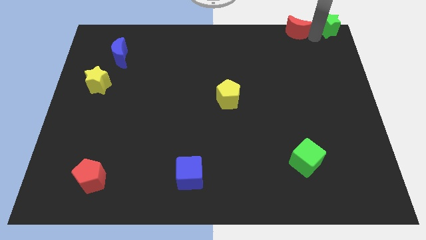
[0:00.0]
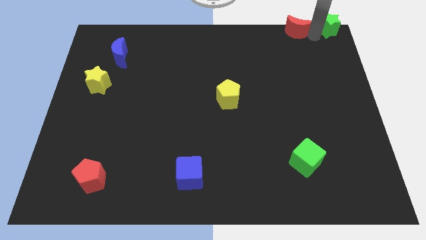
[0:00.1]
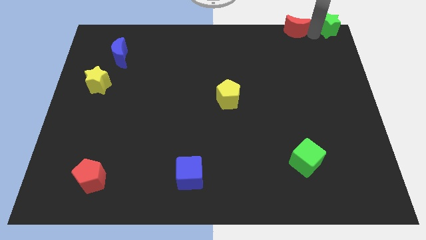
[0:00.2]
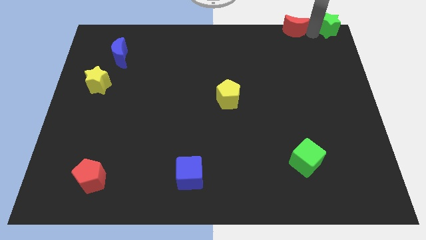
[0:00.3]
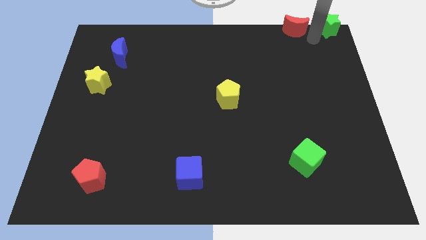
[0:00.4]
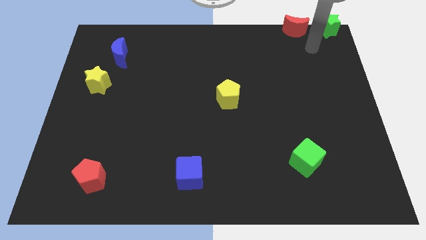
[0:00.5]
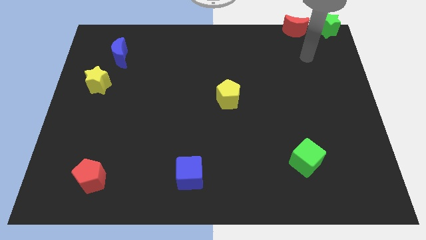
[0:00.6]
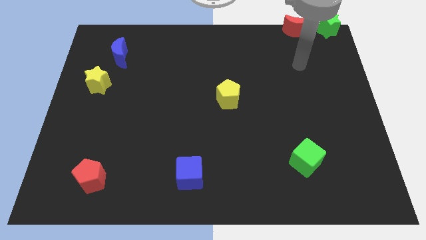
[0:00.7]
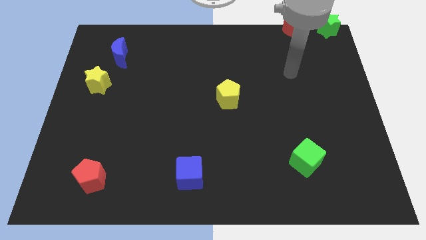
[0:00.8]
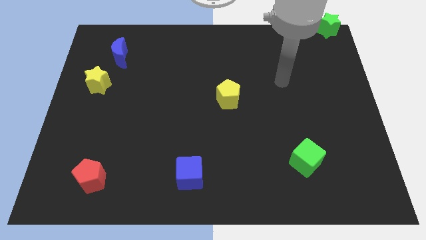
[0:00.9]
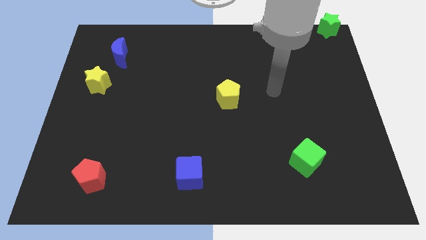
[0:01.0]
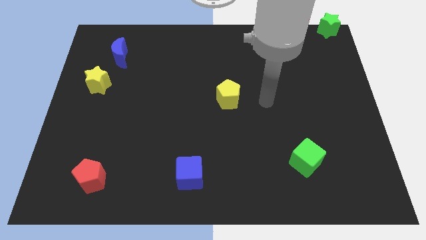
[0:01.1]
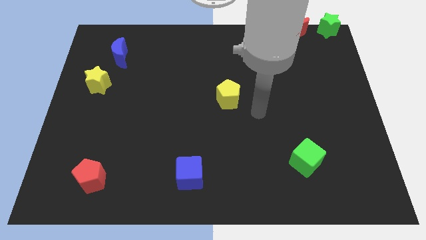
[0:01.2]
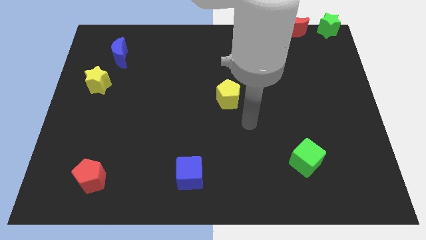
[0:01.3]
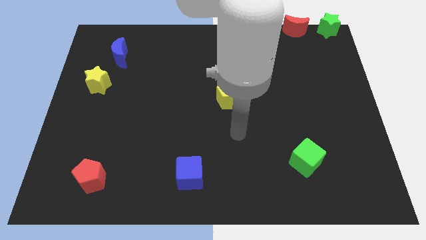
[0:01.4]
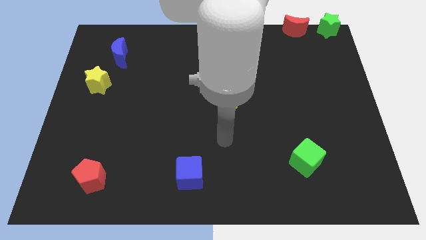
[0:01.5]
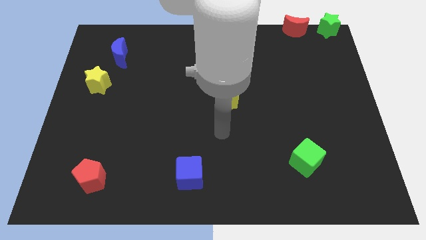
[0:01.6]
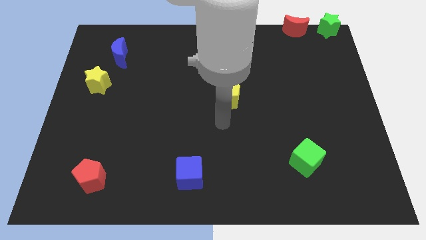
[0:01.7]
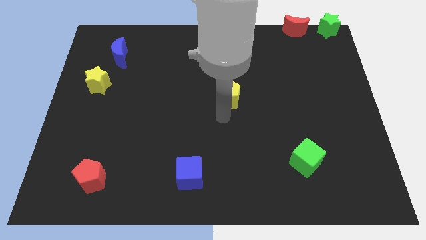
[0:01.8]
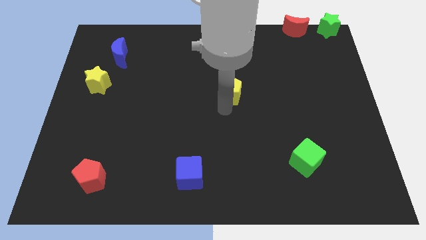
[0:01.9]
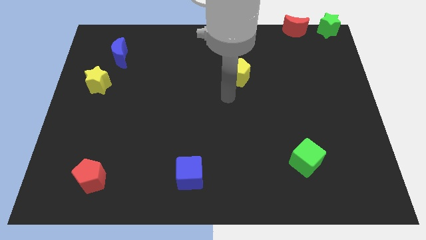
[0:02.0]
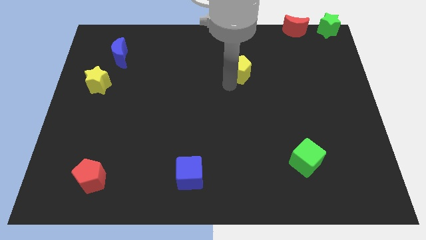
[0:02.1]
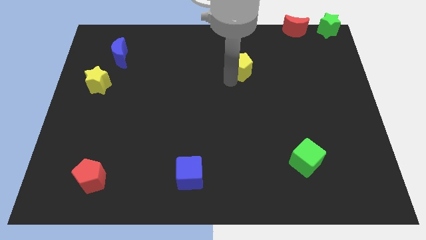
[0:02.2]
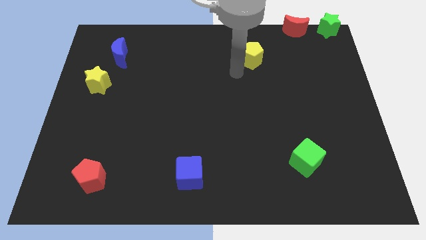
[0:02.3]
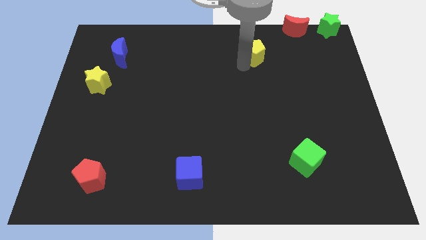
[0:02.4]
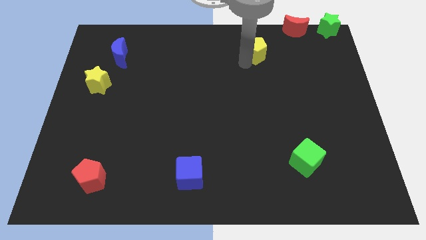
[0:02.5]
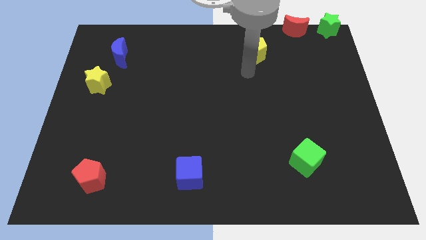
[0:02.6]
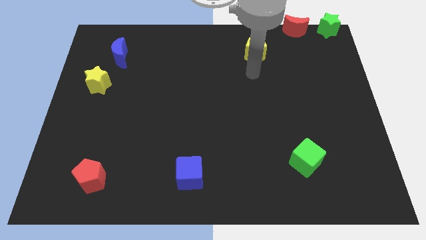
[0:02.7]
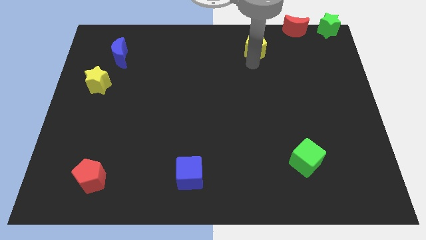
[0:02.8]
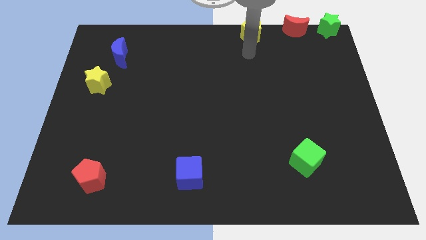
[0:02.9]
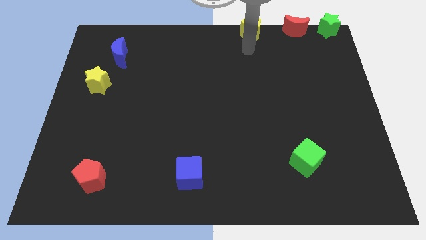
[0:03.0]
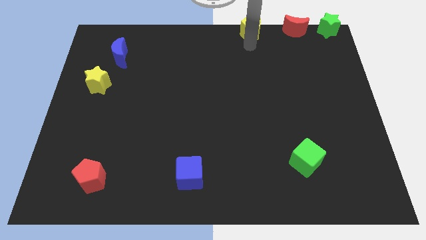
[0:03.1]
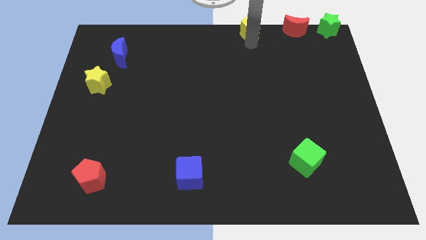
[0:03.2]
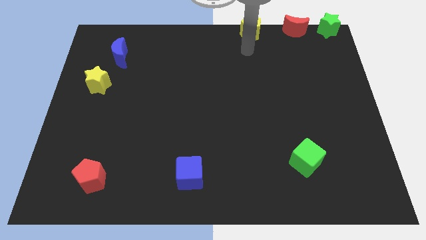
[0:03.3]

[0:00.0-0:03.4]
place the yellow pentagon to the left side of the red moon

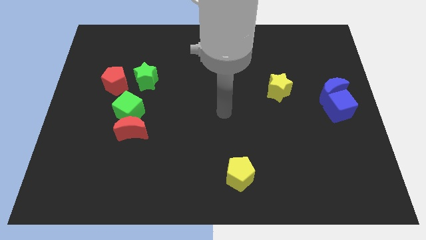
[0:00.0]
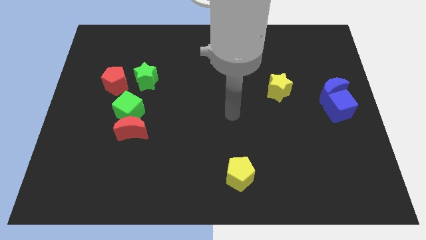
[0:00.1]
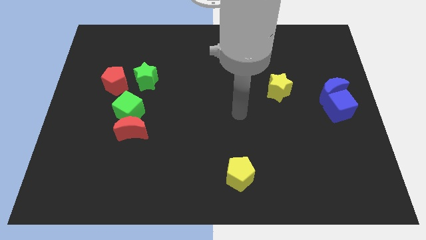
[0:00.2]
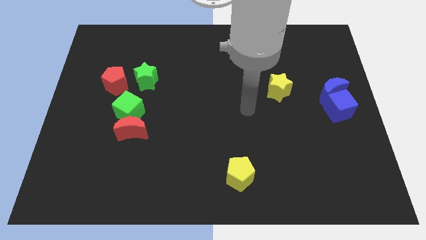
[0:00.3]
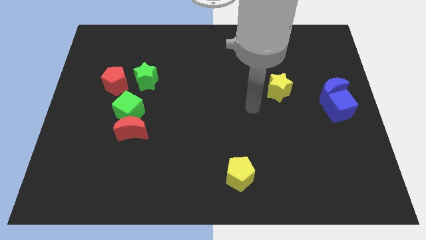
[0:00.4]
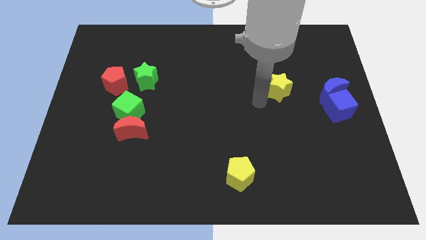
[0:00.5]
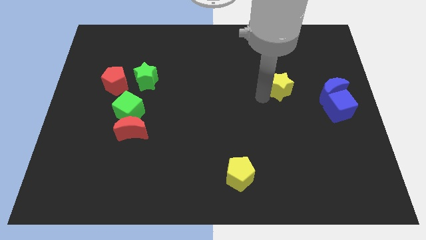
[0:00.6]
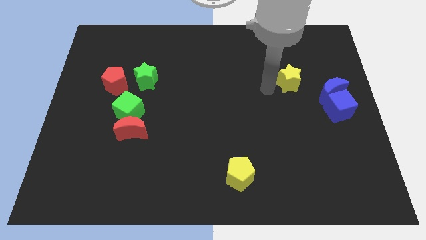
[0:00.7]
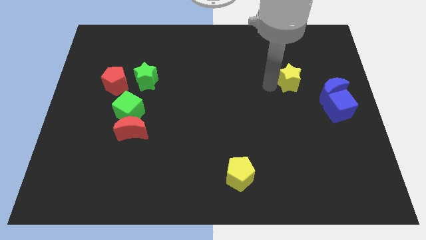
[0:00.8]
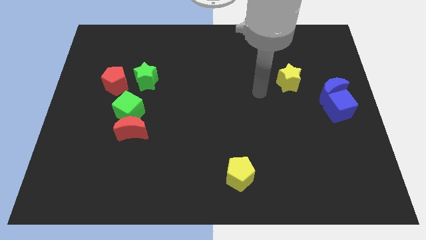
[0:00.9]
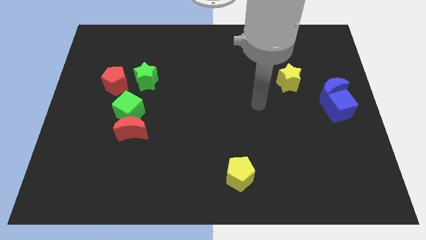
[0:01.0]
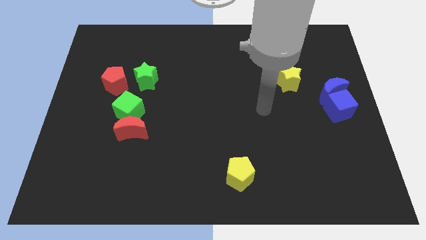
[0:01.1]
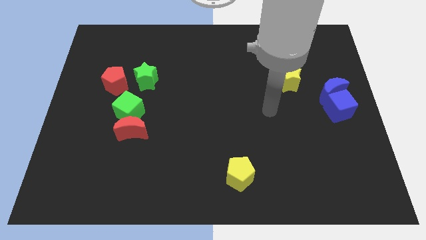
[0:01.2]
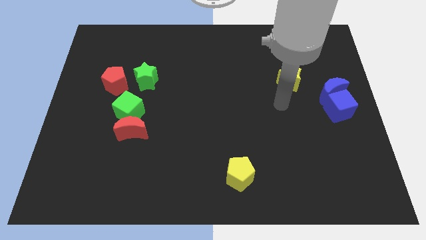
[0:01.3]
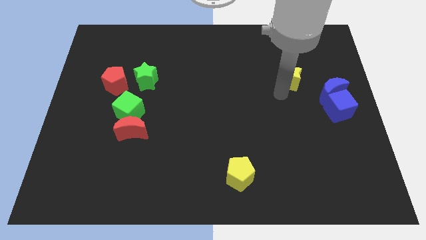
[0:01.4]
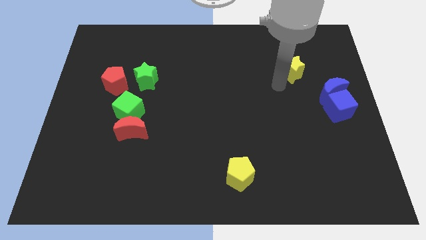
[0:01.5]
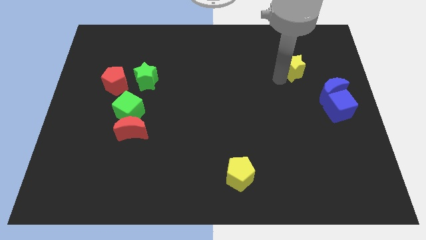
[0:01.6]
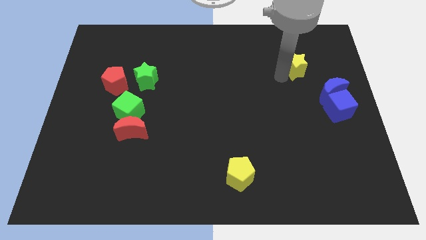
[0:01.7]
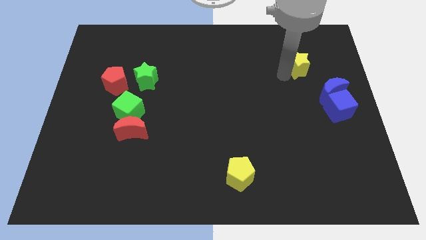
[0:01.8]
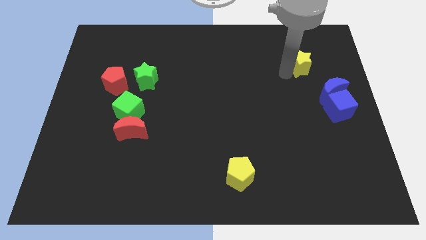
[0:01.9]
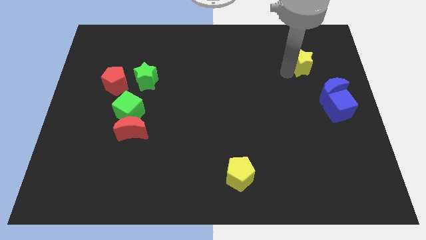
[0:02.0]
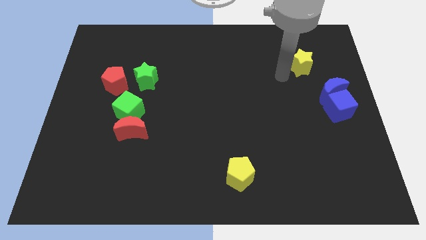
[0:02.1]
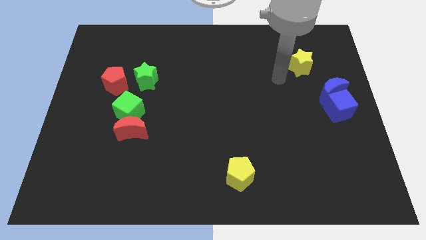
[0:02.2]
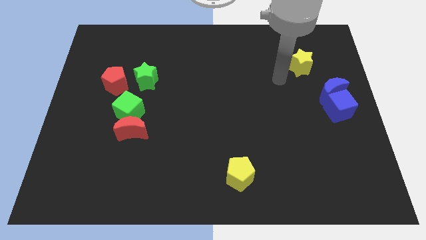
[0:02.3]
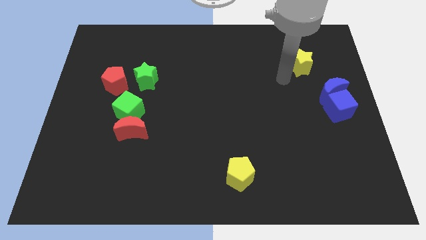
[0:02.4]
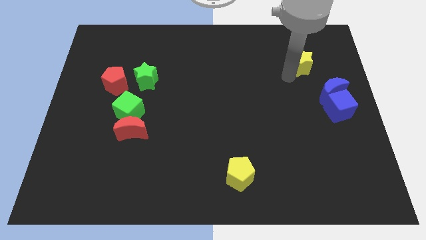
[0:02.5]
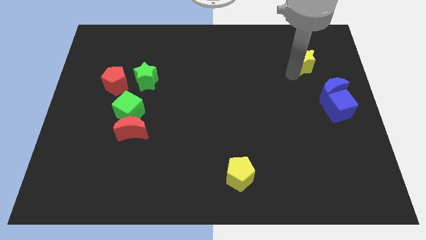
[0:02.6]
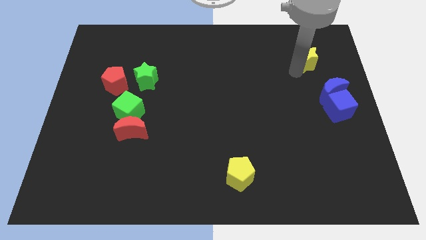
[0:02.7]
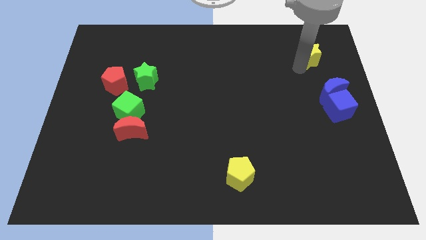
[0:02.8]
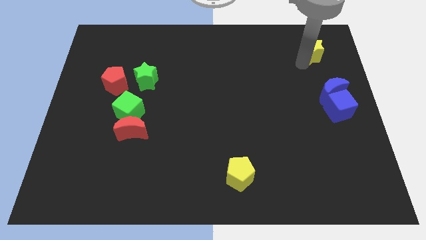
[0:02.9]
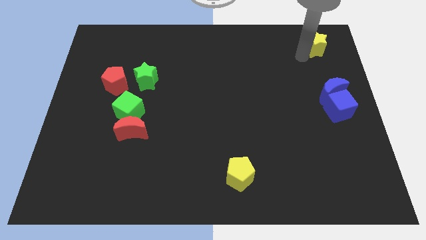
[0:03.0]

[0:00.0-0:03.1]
move the yellow star towards the top right corner

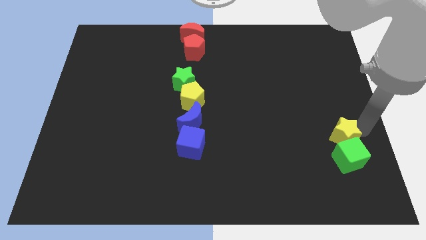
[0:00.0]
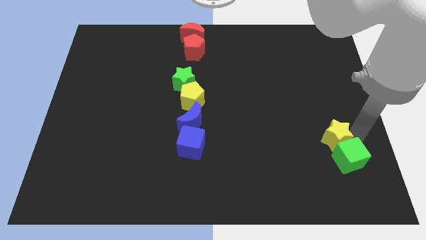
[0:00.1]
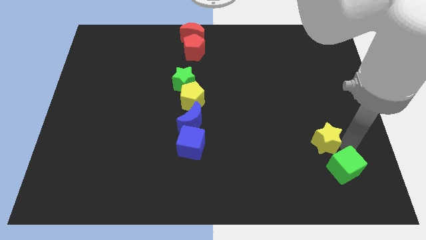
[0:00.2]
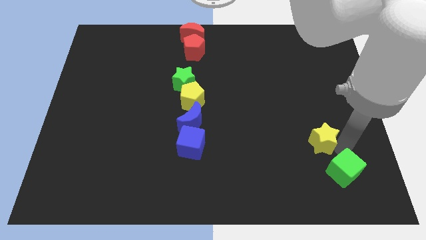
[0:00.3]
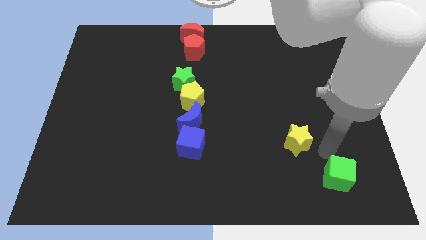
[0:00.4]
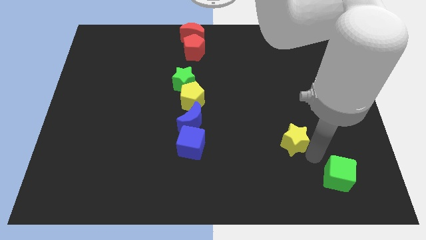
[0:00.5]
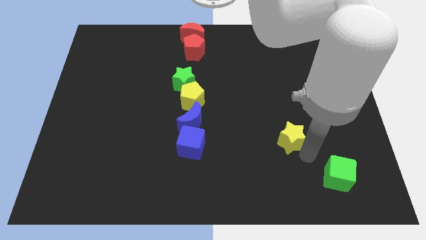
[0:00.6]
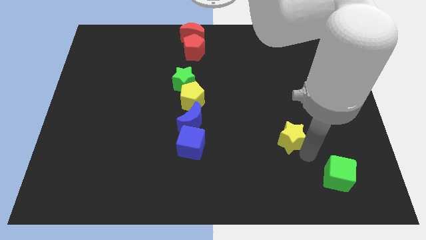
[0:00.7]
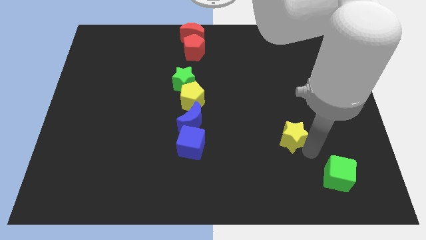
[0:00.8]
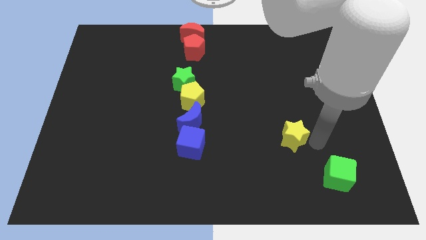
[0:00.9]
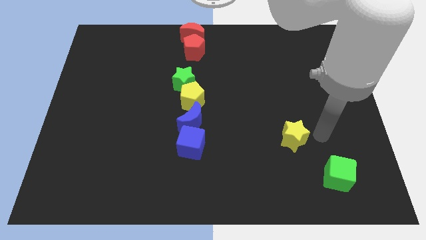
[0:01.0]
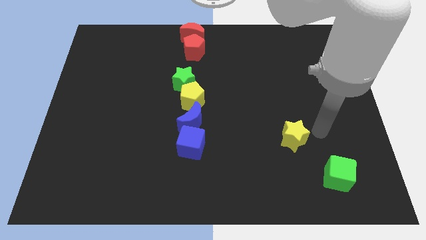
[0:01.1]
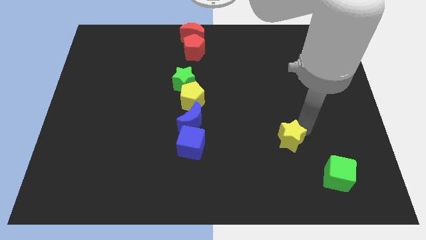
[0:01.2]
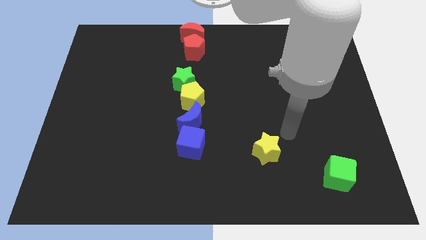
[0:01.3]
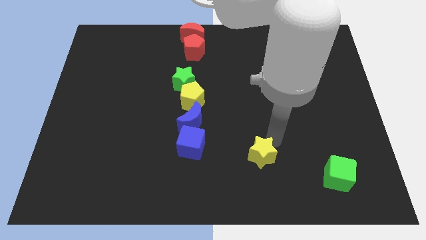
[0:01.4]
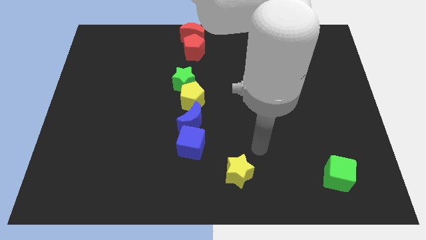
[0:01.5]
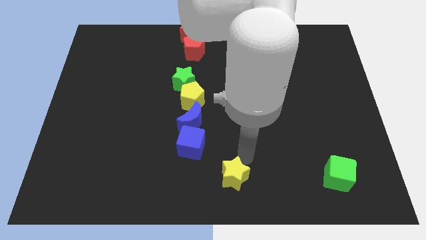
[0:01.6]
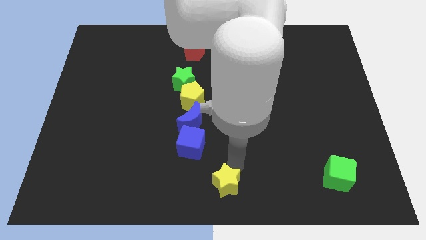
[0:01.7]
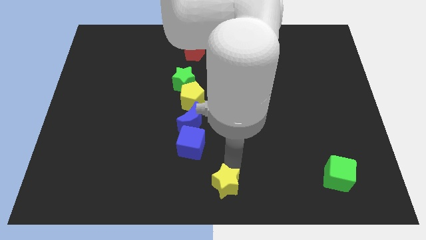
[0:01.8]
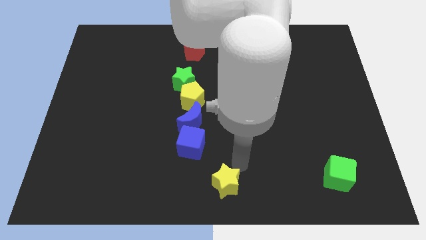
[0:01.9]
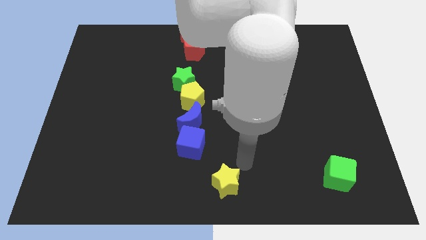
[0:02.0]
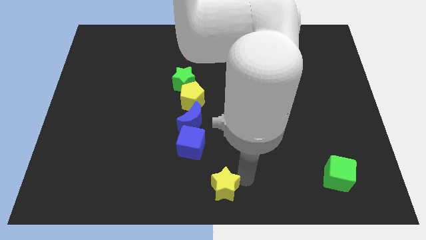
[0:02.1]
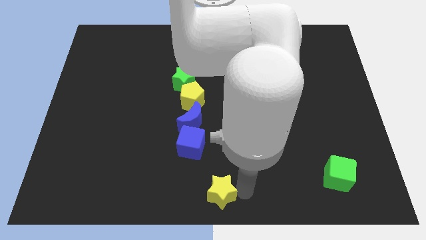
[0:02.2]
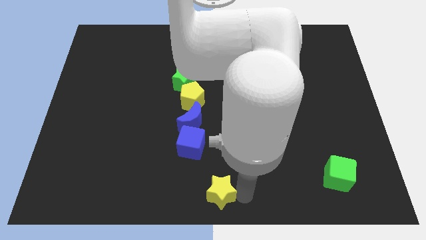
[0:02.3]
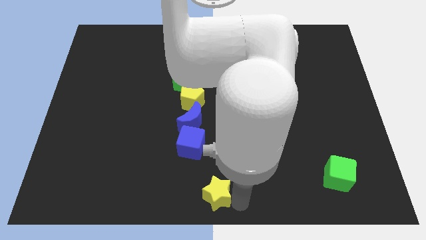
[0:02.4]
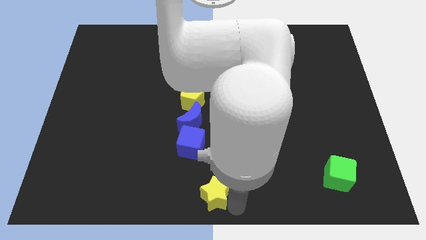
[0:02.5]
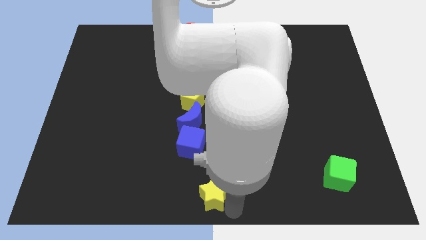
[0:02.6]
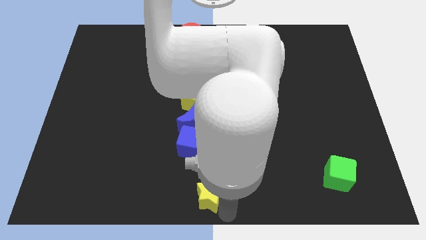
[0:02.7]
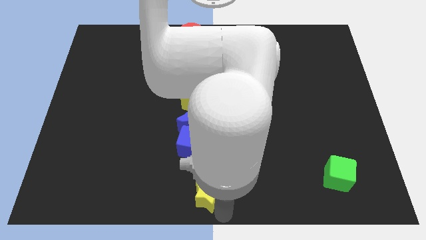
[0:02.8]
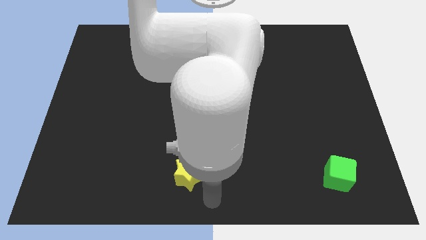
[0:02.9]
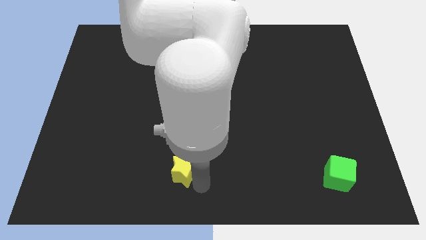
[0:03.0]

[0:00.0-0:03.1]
slide yellow star into blue cube
